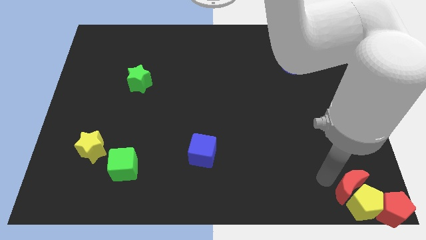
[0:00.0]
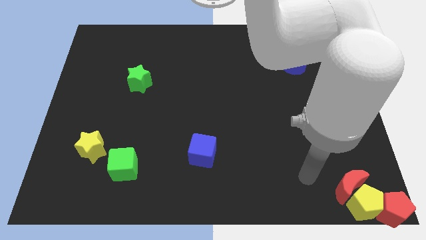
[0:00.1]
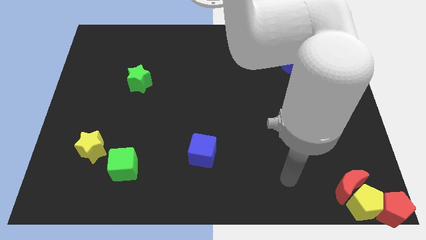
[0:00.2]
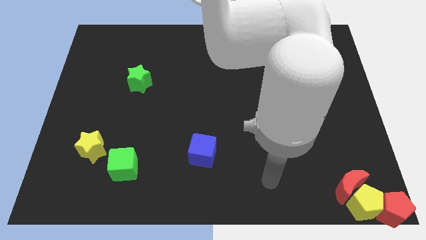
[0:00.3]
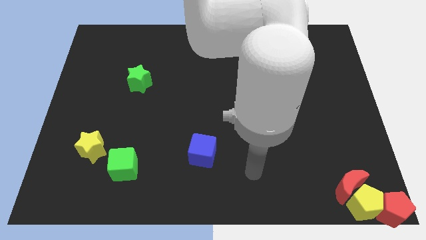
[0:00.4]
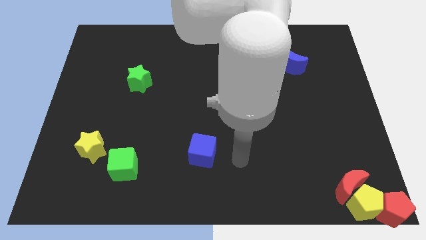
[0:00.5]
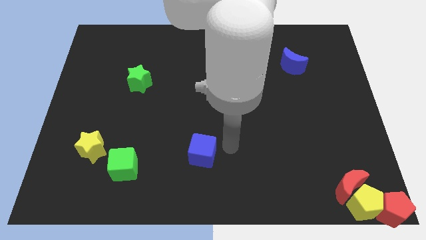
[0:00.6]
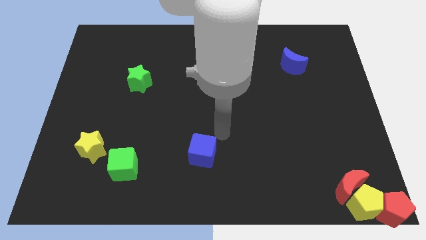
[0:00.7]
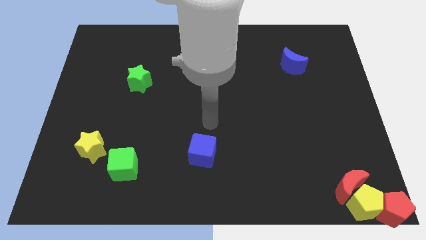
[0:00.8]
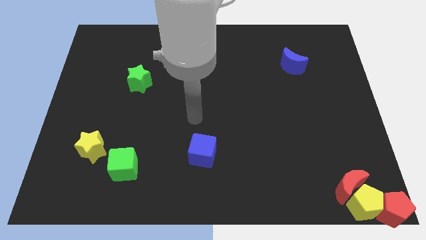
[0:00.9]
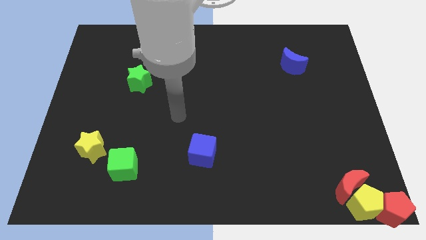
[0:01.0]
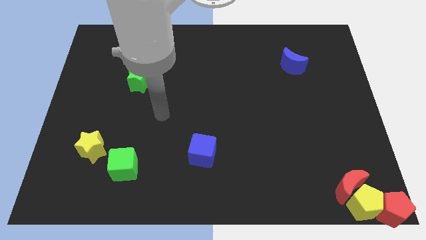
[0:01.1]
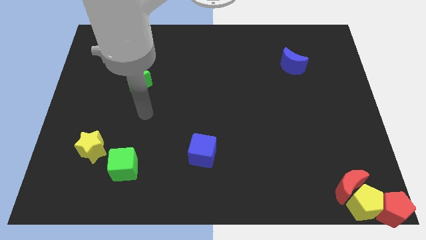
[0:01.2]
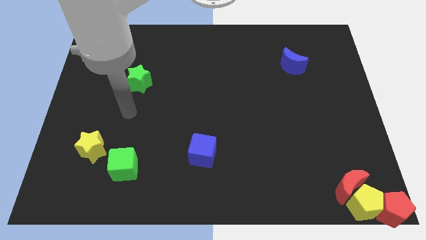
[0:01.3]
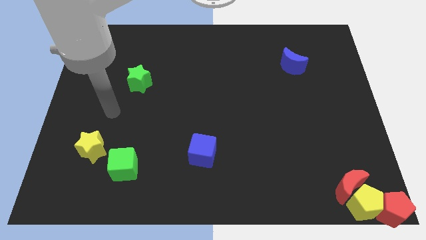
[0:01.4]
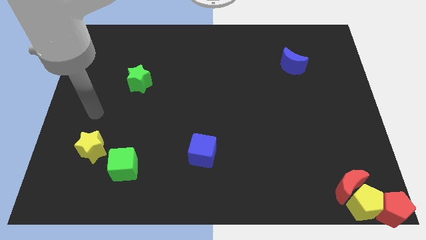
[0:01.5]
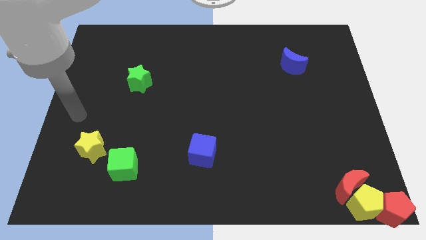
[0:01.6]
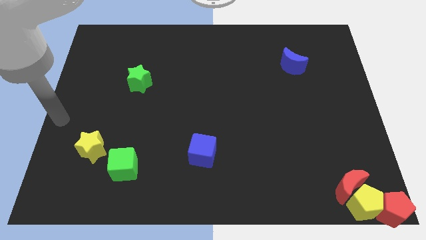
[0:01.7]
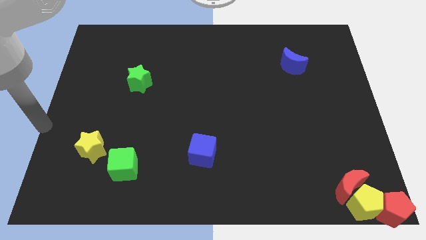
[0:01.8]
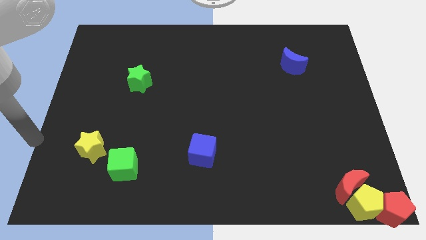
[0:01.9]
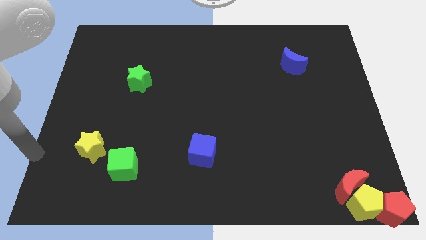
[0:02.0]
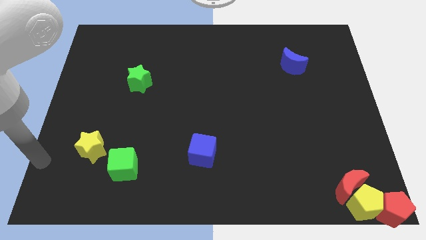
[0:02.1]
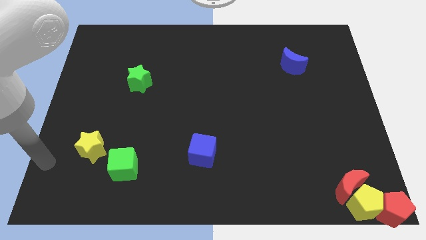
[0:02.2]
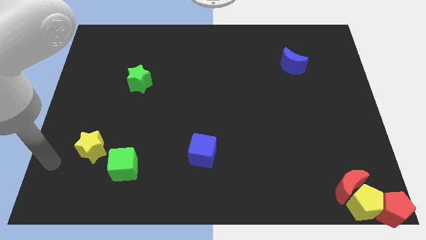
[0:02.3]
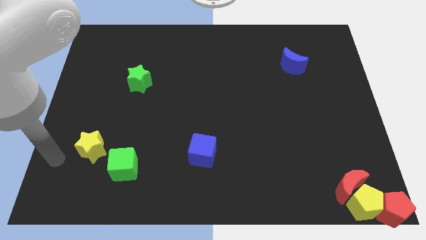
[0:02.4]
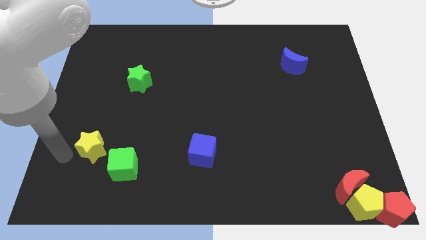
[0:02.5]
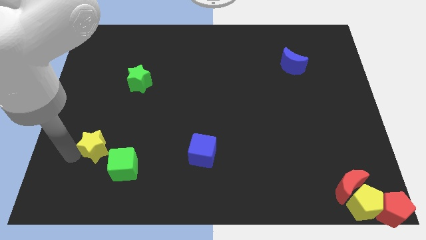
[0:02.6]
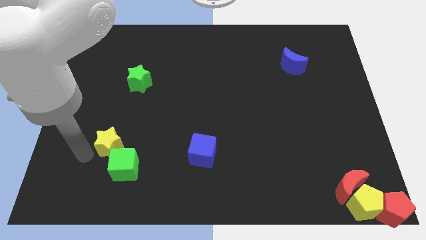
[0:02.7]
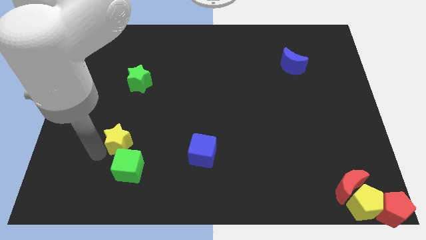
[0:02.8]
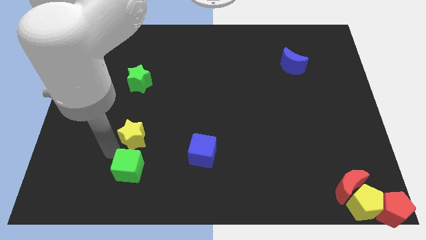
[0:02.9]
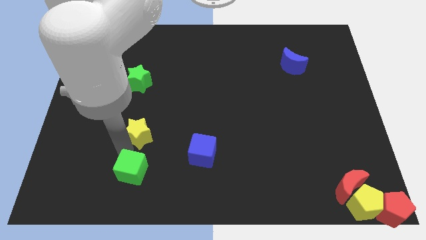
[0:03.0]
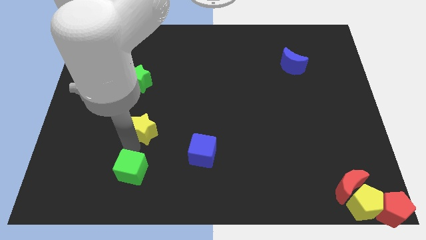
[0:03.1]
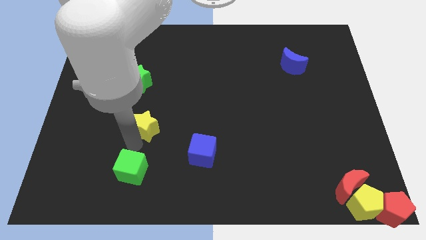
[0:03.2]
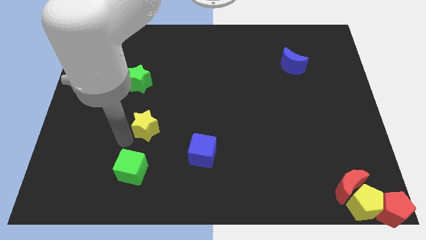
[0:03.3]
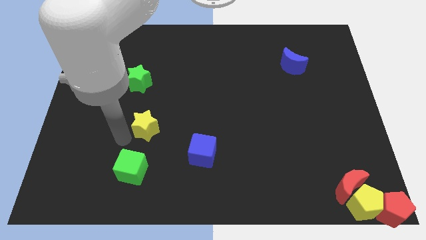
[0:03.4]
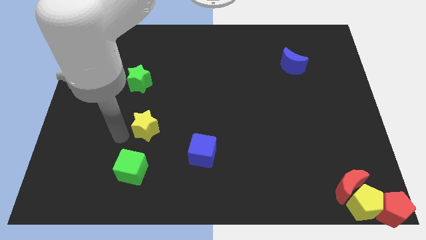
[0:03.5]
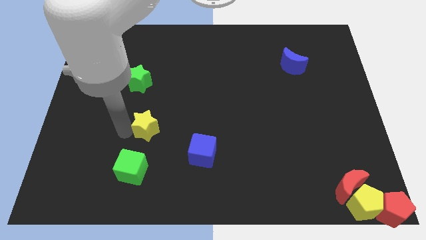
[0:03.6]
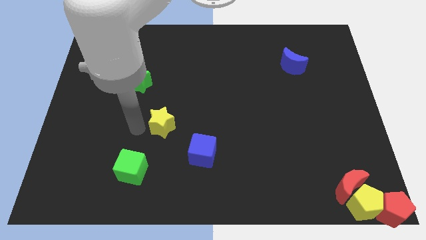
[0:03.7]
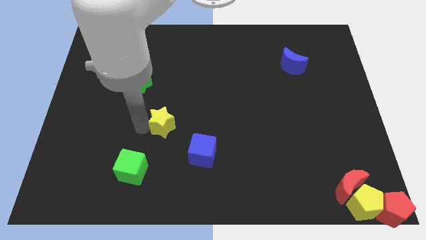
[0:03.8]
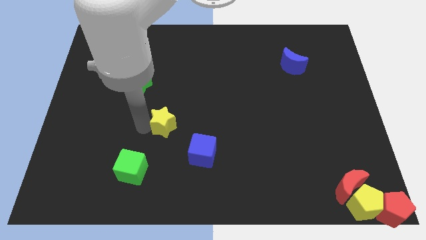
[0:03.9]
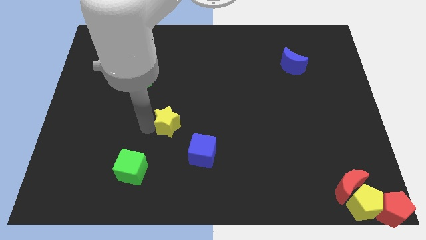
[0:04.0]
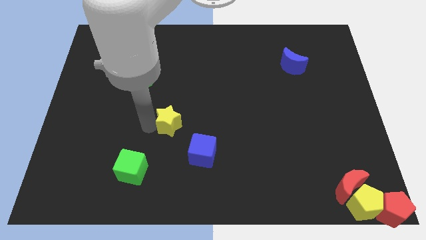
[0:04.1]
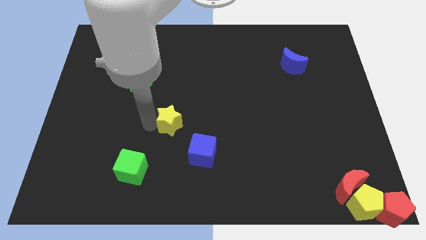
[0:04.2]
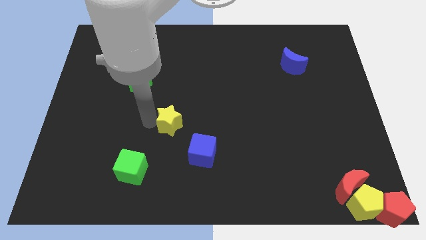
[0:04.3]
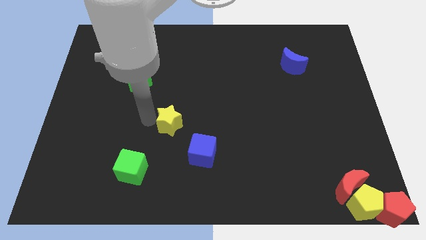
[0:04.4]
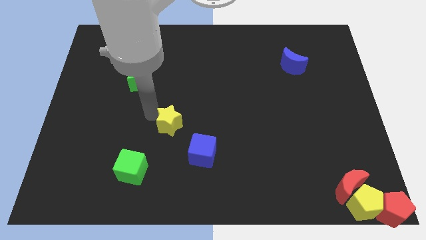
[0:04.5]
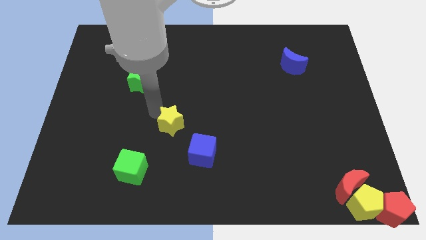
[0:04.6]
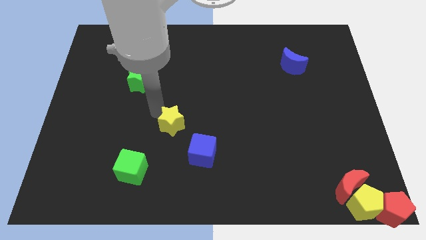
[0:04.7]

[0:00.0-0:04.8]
push the yellow star to the top left of the blue cube

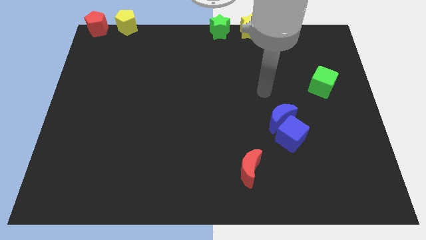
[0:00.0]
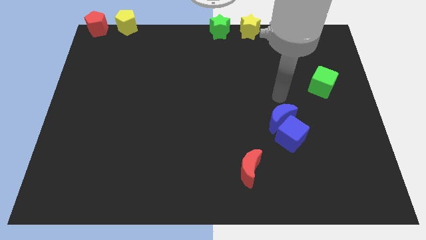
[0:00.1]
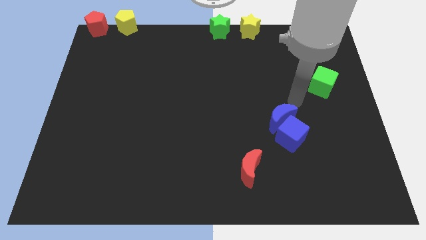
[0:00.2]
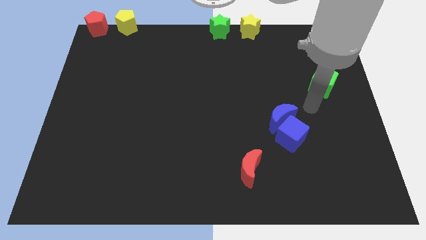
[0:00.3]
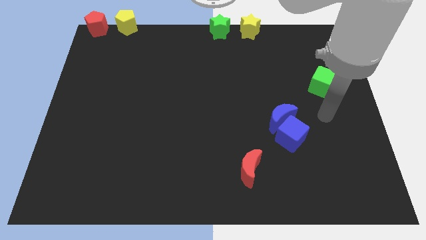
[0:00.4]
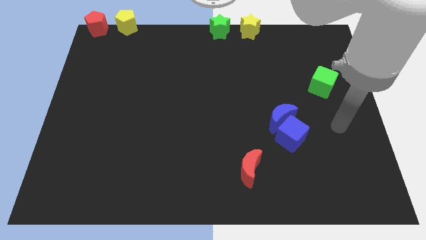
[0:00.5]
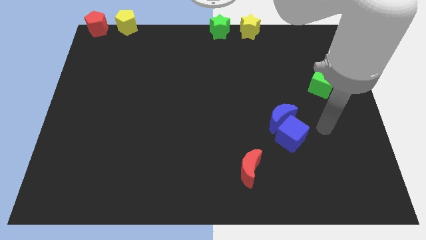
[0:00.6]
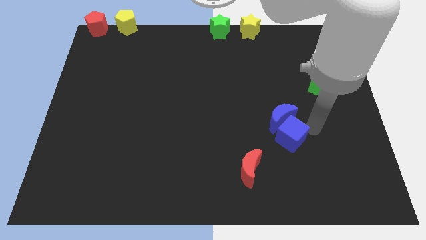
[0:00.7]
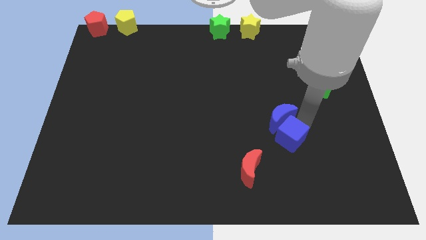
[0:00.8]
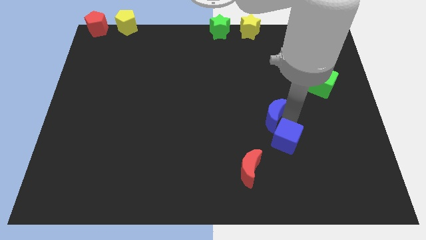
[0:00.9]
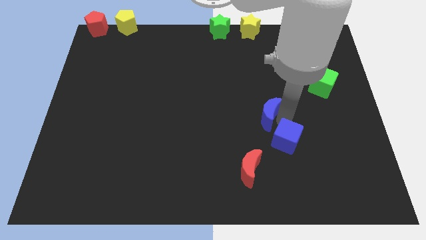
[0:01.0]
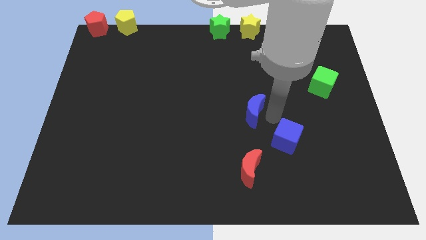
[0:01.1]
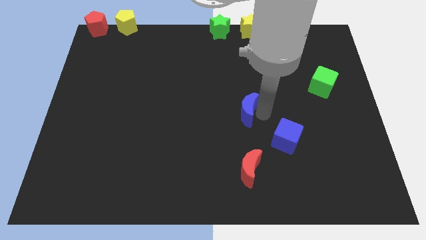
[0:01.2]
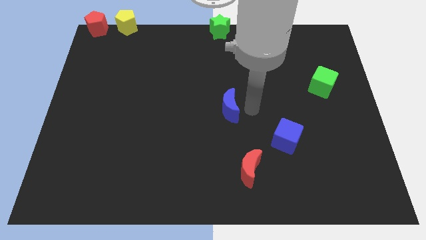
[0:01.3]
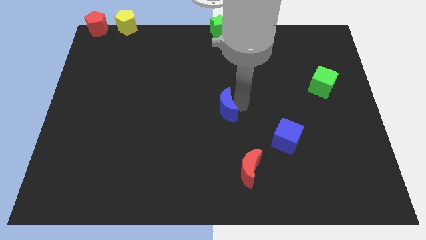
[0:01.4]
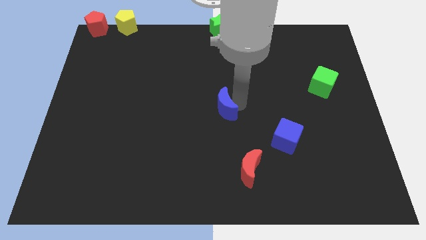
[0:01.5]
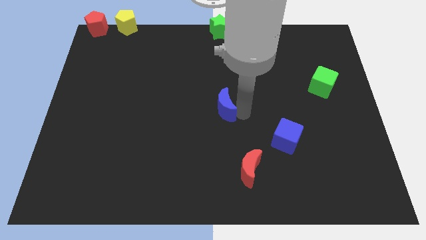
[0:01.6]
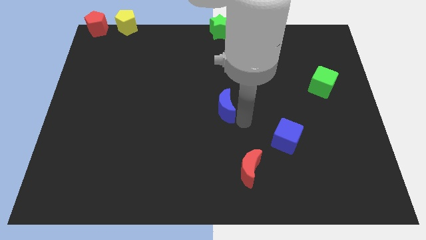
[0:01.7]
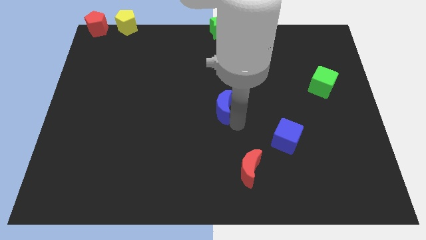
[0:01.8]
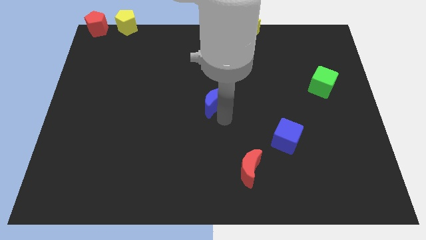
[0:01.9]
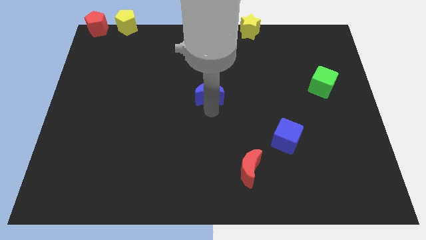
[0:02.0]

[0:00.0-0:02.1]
separate the blue moon from the blue block

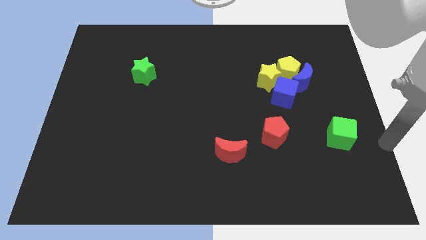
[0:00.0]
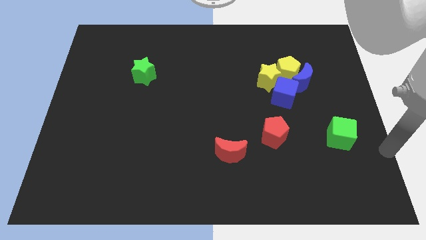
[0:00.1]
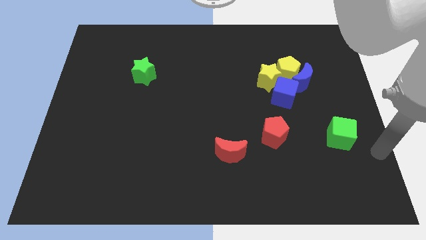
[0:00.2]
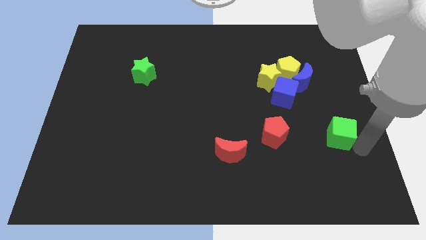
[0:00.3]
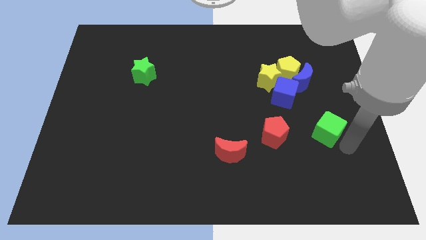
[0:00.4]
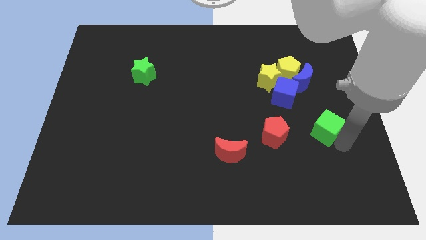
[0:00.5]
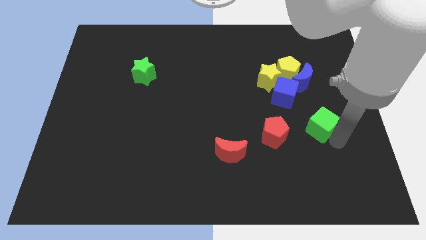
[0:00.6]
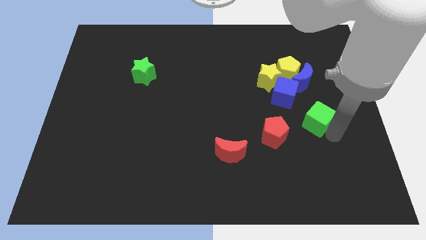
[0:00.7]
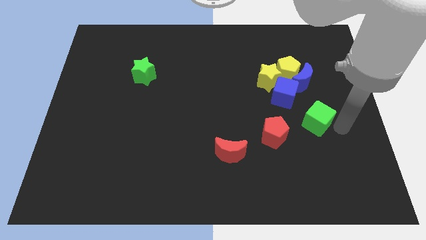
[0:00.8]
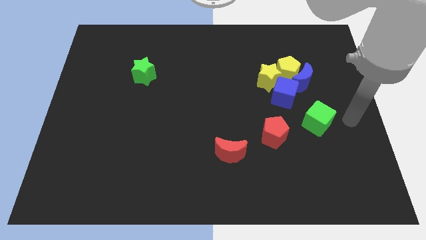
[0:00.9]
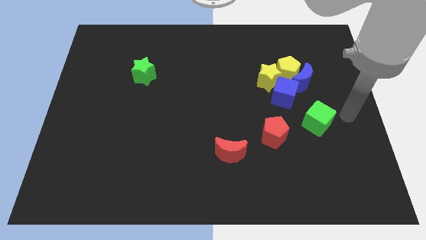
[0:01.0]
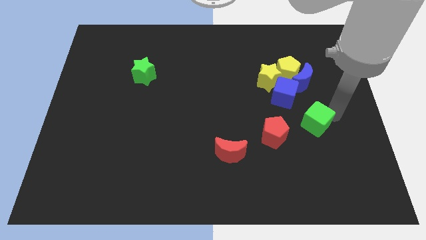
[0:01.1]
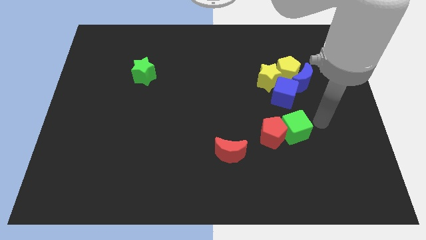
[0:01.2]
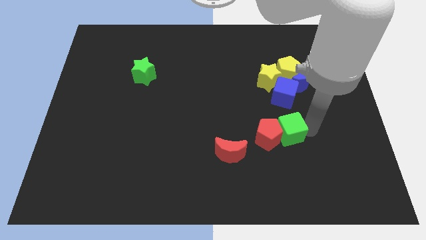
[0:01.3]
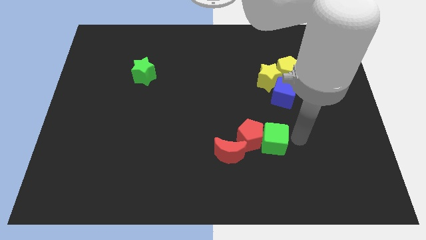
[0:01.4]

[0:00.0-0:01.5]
move the green cube into the red pentagon

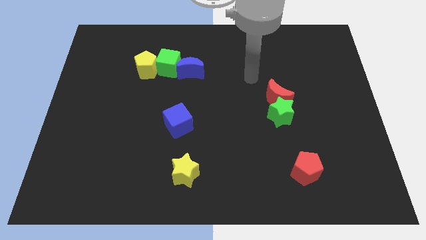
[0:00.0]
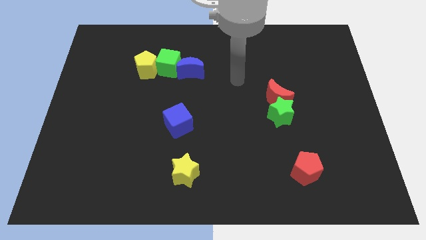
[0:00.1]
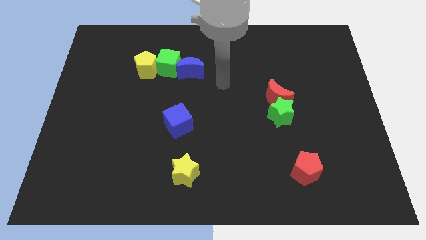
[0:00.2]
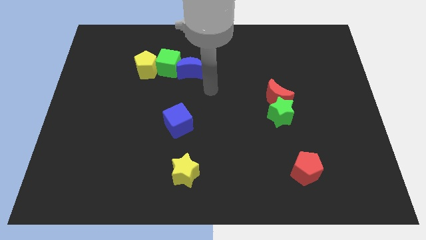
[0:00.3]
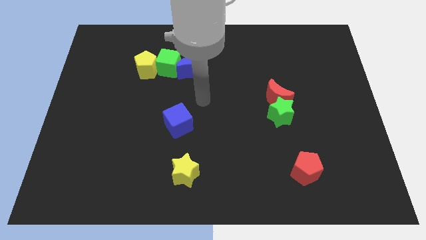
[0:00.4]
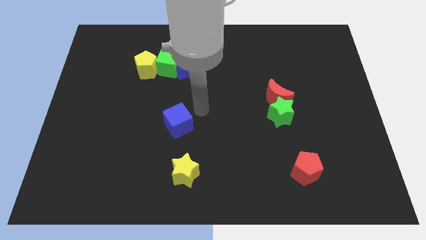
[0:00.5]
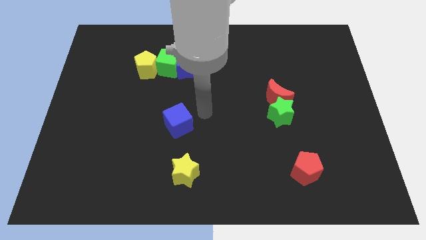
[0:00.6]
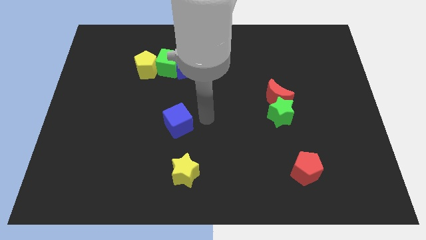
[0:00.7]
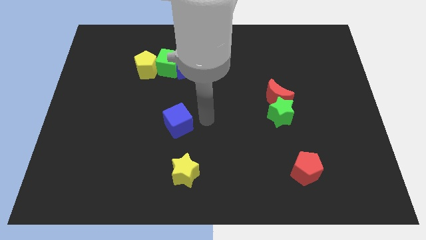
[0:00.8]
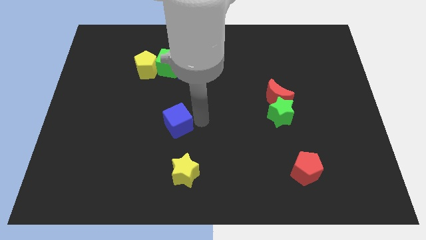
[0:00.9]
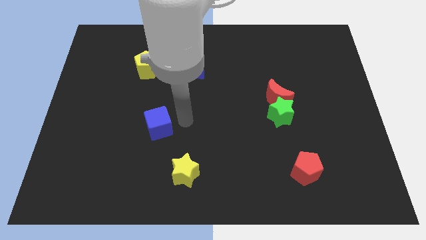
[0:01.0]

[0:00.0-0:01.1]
hit the blue cube on the right side of it
